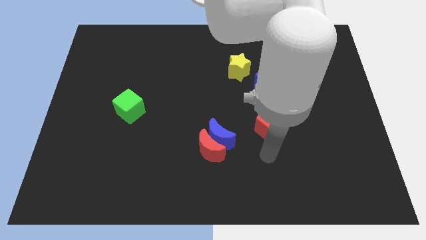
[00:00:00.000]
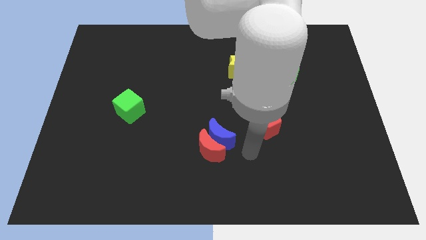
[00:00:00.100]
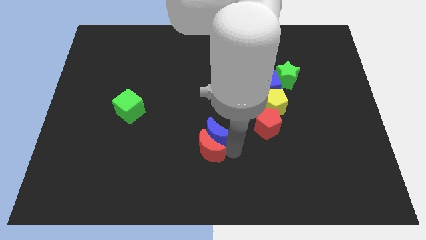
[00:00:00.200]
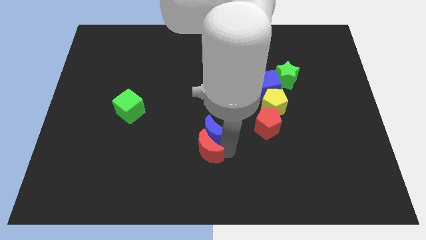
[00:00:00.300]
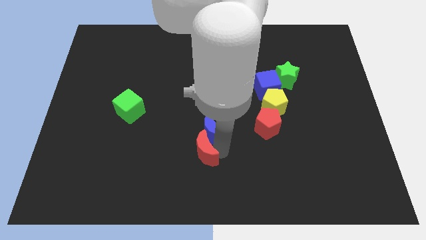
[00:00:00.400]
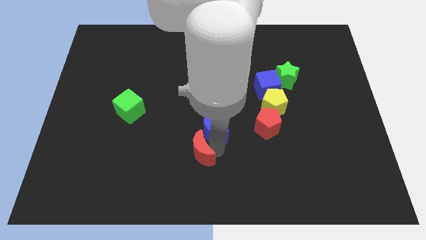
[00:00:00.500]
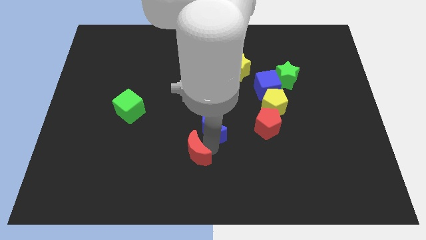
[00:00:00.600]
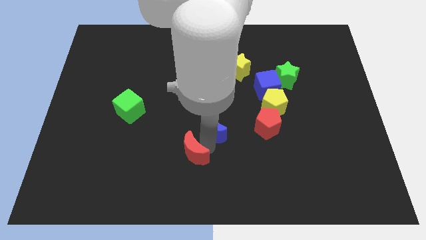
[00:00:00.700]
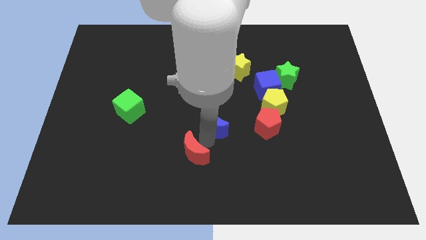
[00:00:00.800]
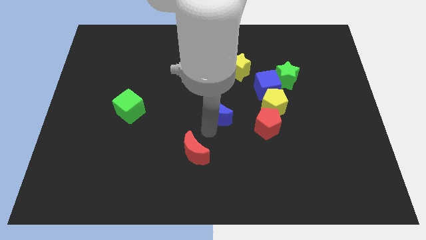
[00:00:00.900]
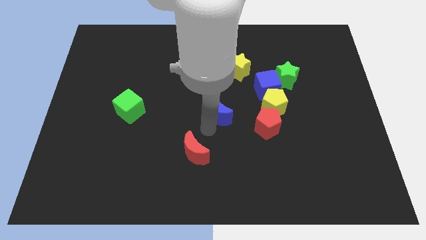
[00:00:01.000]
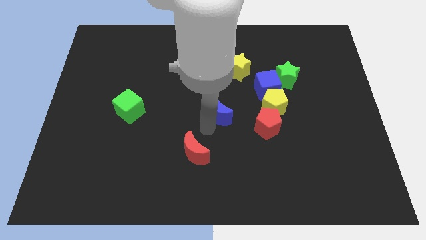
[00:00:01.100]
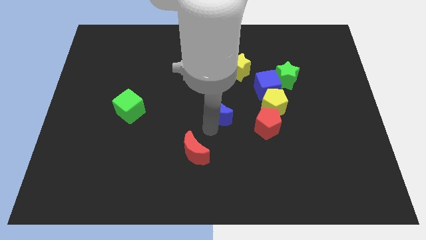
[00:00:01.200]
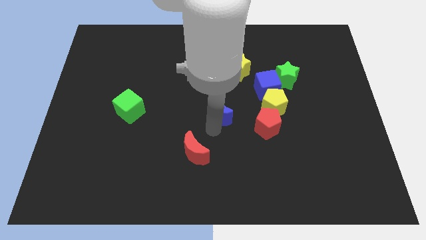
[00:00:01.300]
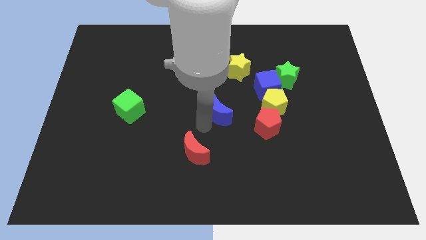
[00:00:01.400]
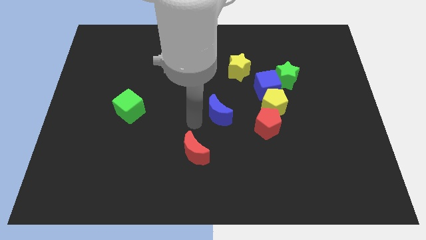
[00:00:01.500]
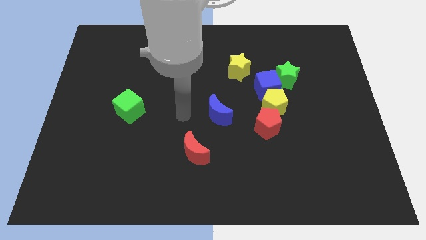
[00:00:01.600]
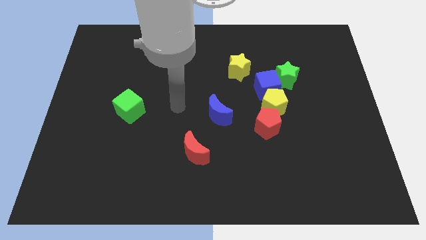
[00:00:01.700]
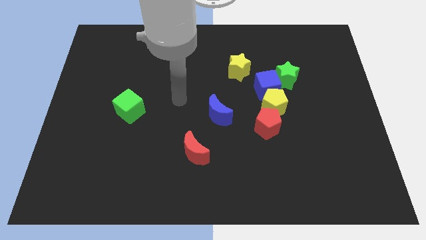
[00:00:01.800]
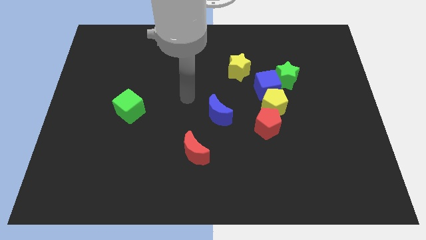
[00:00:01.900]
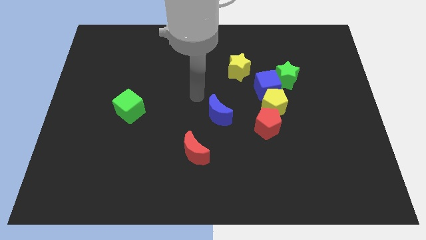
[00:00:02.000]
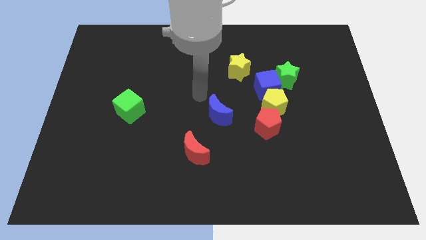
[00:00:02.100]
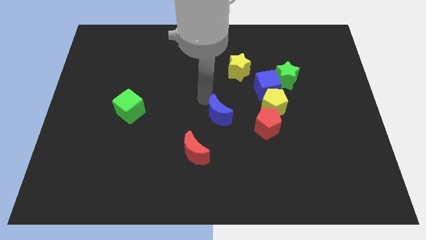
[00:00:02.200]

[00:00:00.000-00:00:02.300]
separate the blue moon from the red moon

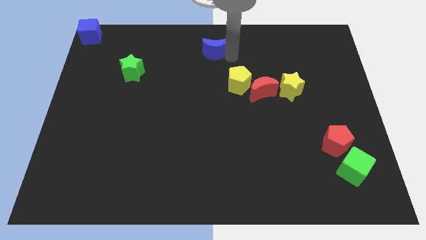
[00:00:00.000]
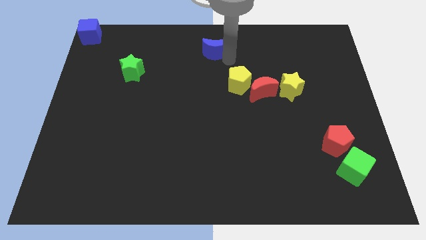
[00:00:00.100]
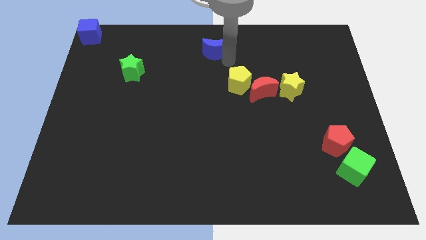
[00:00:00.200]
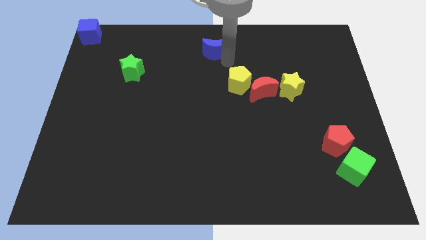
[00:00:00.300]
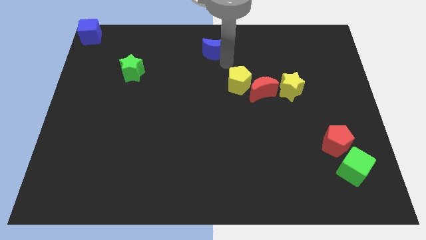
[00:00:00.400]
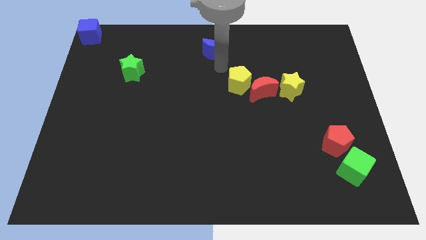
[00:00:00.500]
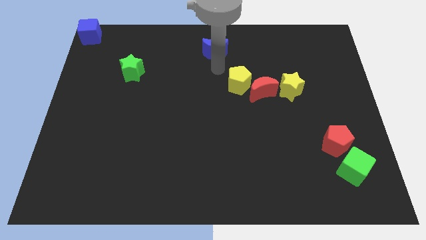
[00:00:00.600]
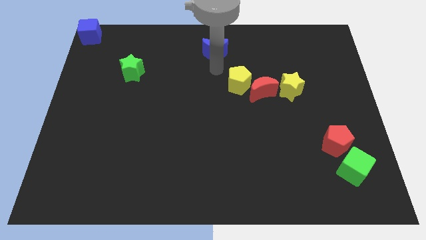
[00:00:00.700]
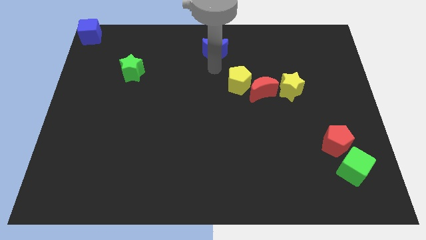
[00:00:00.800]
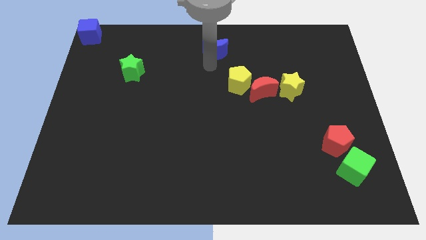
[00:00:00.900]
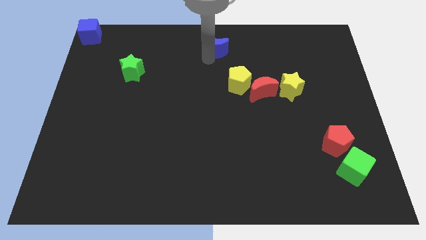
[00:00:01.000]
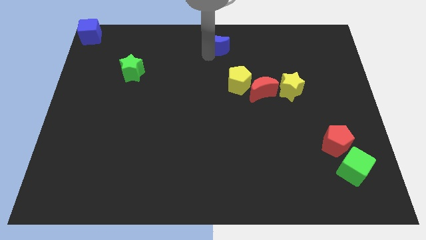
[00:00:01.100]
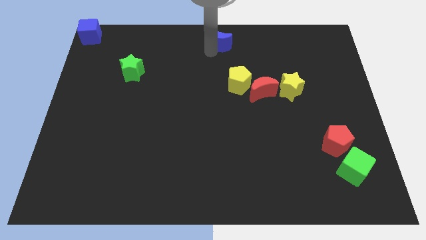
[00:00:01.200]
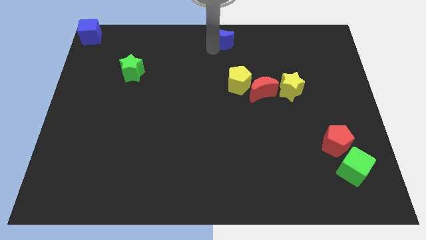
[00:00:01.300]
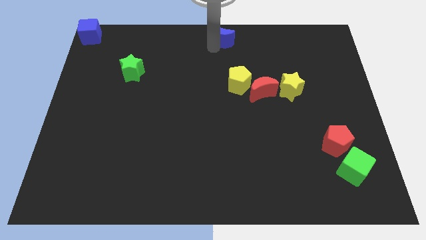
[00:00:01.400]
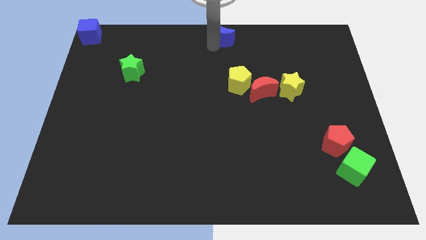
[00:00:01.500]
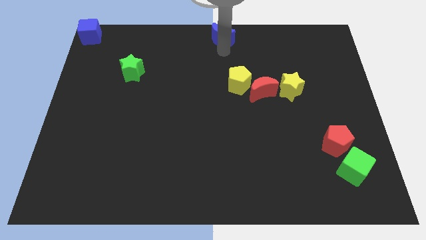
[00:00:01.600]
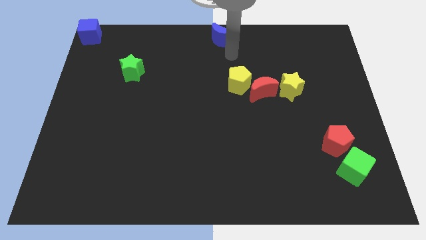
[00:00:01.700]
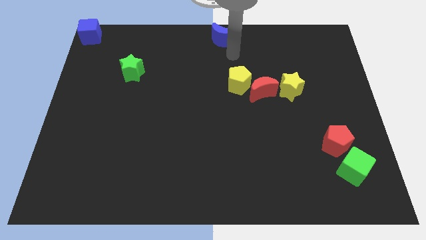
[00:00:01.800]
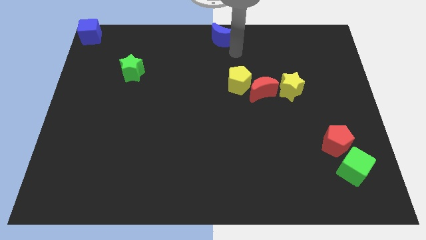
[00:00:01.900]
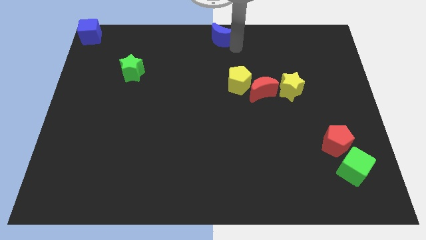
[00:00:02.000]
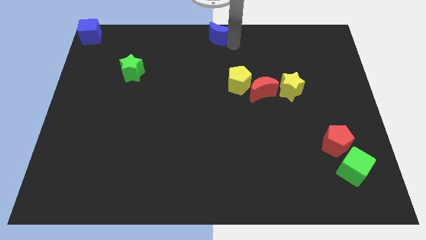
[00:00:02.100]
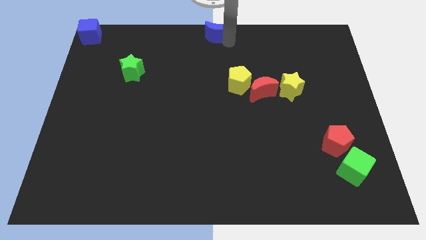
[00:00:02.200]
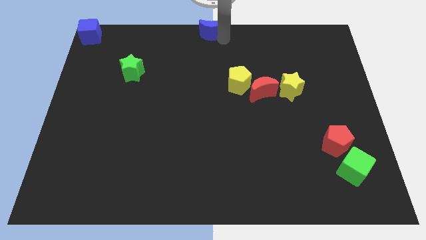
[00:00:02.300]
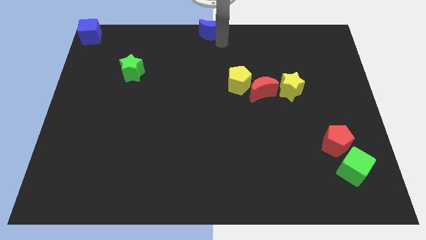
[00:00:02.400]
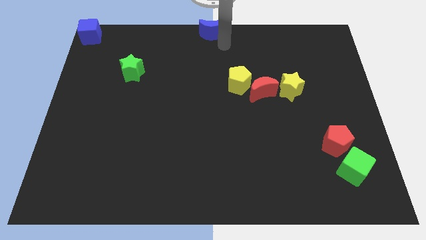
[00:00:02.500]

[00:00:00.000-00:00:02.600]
place the blue crescent at the top center of the board

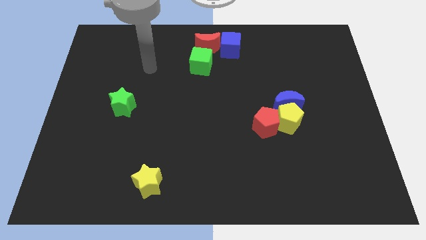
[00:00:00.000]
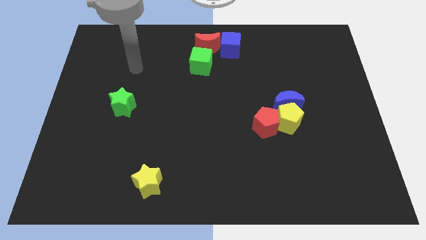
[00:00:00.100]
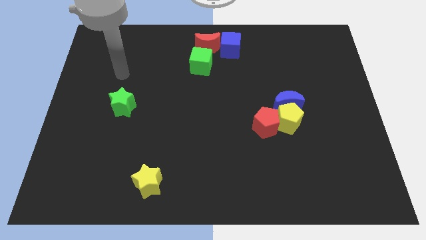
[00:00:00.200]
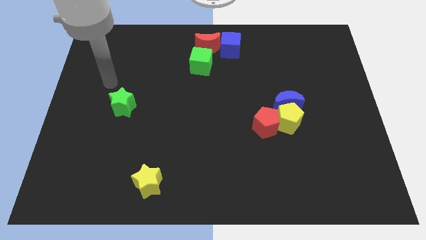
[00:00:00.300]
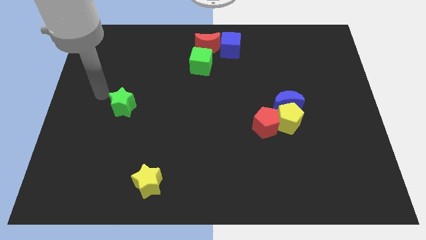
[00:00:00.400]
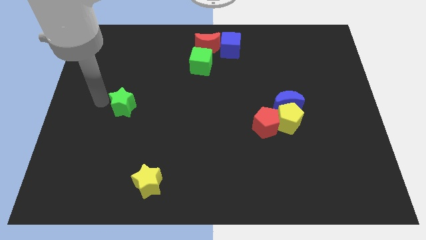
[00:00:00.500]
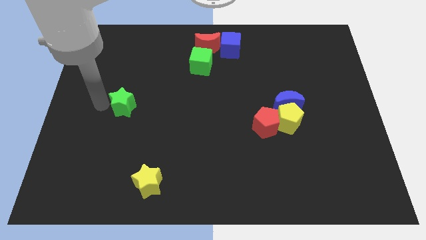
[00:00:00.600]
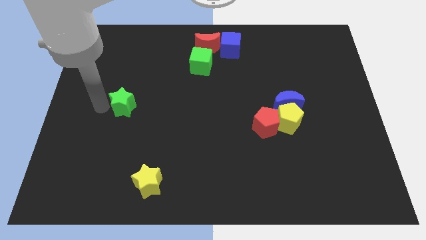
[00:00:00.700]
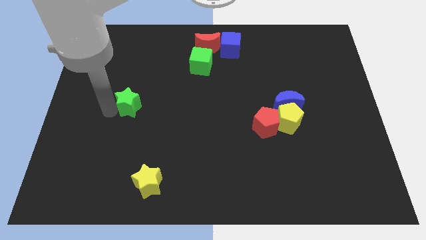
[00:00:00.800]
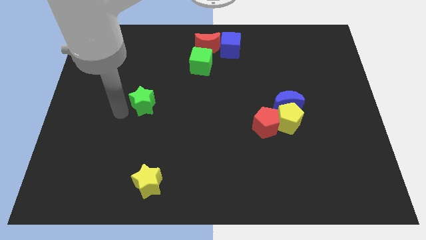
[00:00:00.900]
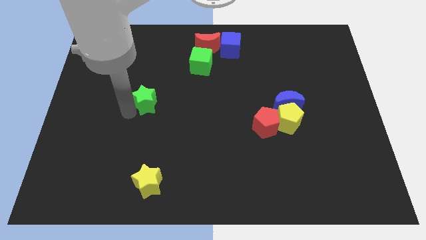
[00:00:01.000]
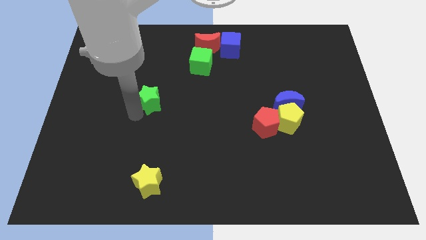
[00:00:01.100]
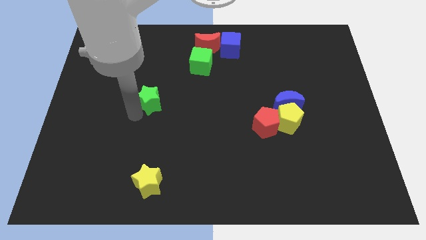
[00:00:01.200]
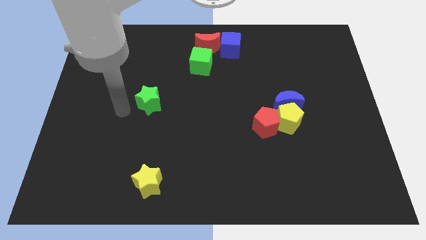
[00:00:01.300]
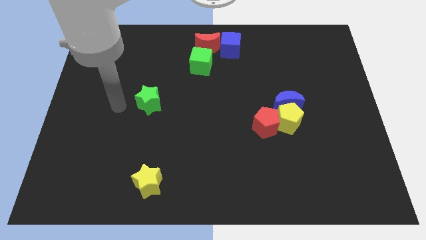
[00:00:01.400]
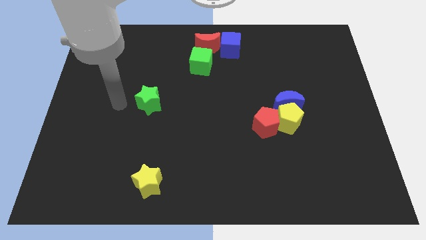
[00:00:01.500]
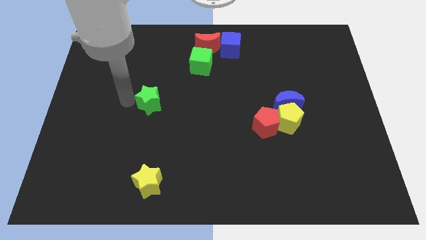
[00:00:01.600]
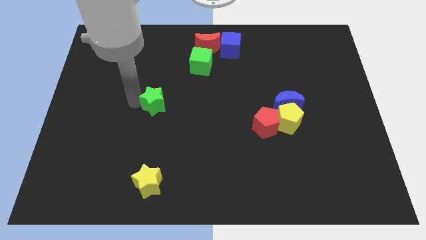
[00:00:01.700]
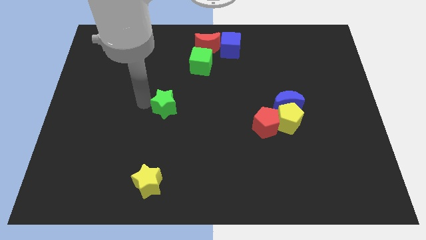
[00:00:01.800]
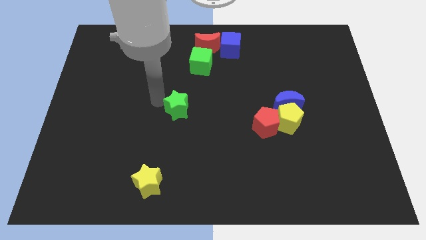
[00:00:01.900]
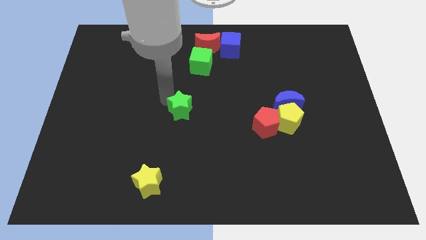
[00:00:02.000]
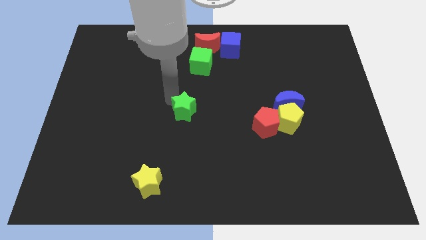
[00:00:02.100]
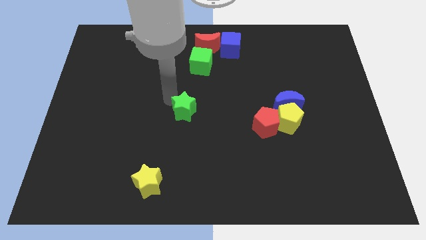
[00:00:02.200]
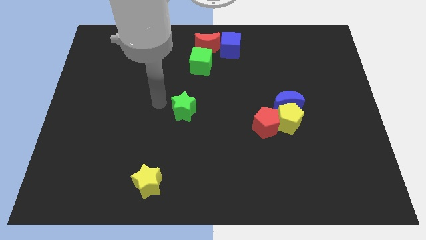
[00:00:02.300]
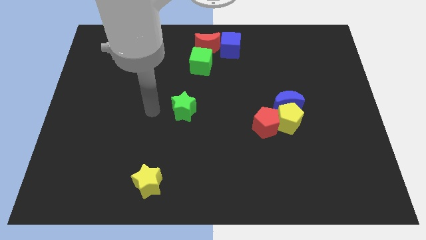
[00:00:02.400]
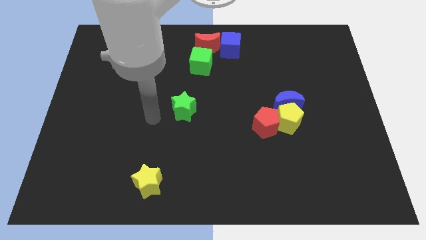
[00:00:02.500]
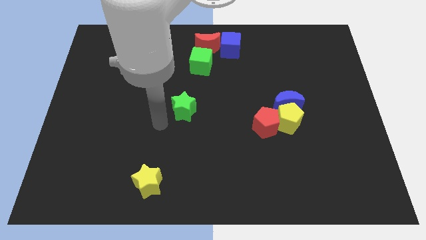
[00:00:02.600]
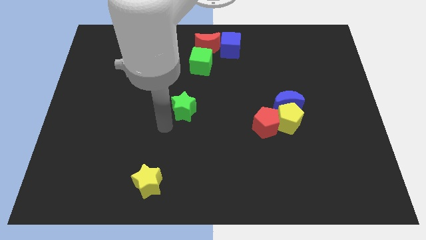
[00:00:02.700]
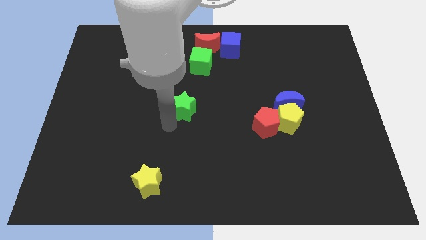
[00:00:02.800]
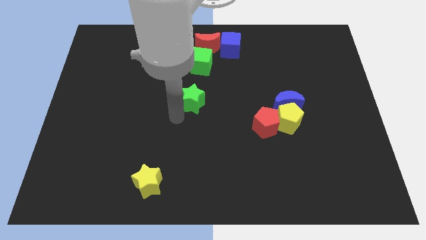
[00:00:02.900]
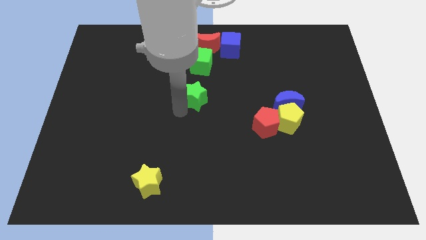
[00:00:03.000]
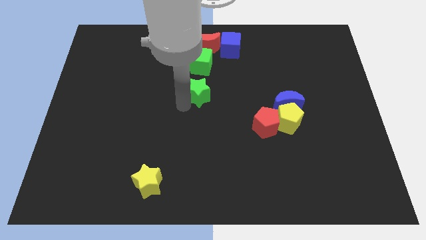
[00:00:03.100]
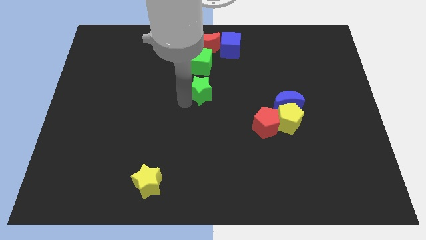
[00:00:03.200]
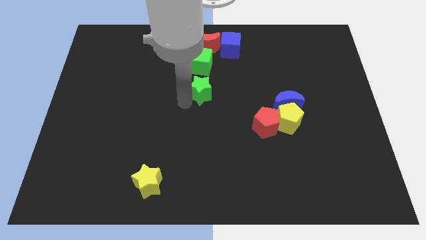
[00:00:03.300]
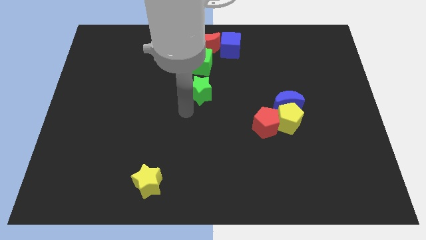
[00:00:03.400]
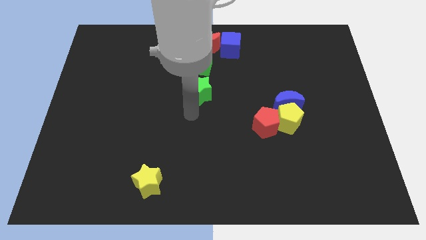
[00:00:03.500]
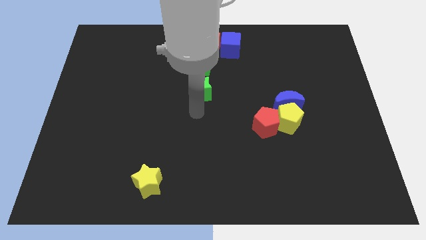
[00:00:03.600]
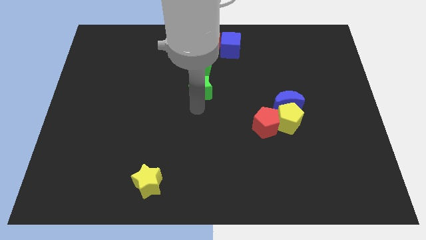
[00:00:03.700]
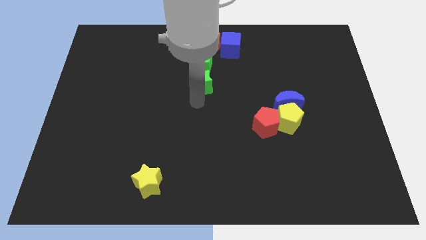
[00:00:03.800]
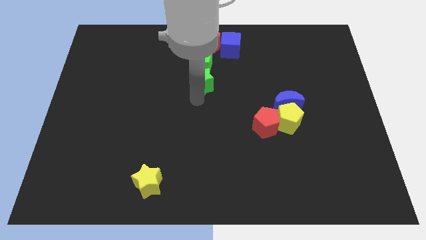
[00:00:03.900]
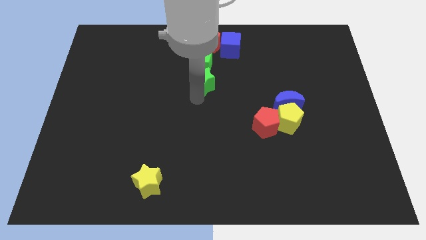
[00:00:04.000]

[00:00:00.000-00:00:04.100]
slide green star below the green cube
